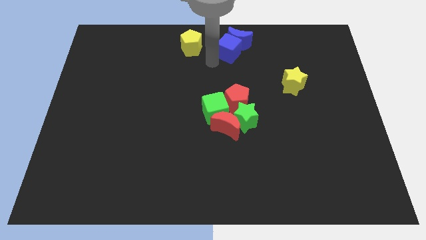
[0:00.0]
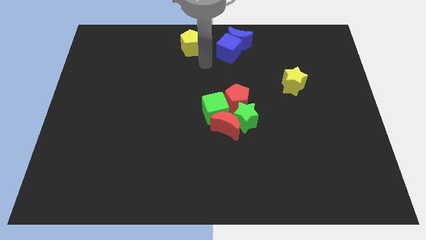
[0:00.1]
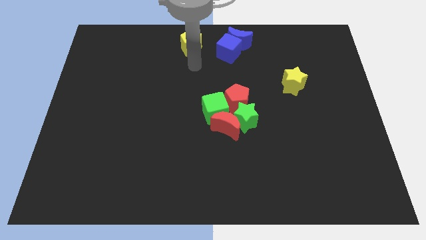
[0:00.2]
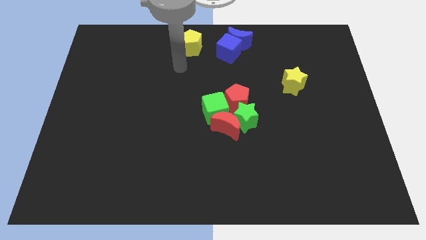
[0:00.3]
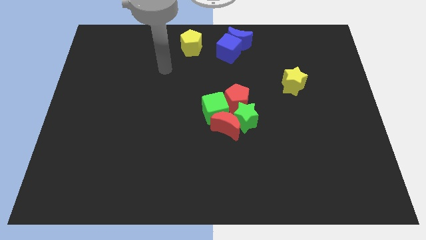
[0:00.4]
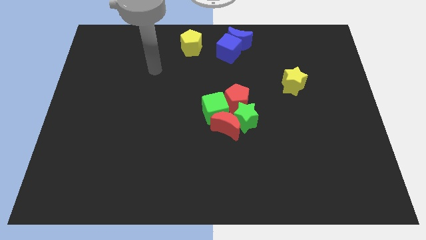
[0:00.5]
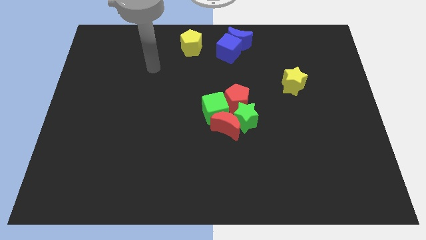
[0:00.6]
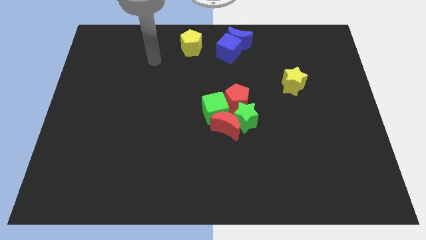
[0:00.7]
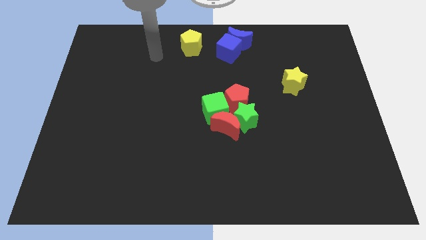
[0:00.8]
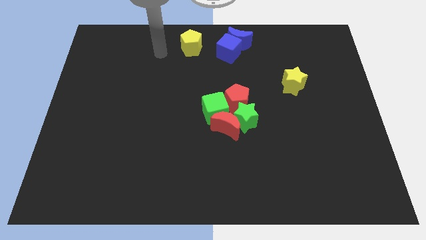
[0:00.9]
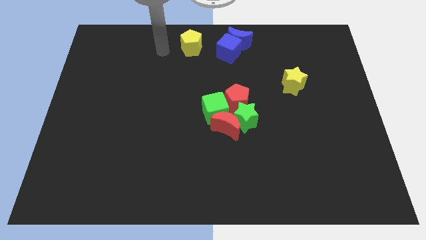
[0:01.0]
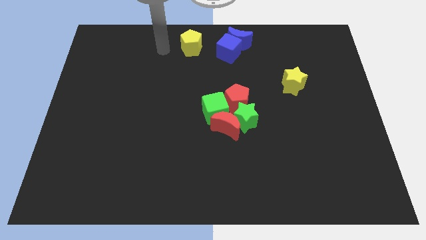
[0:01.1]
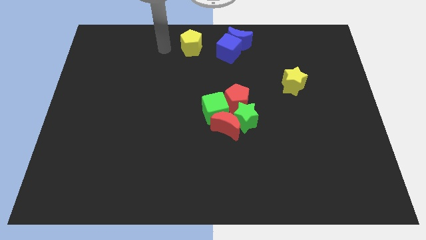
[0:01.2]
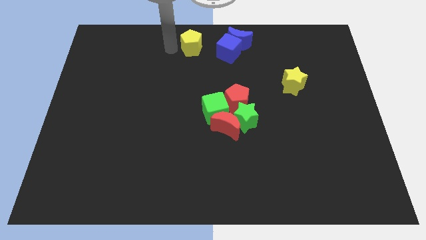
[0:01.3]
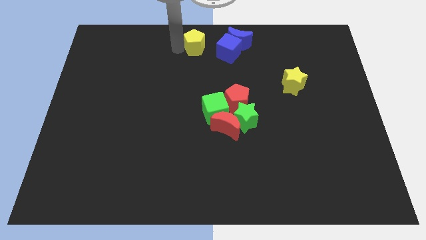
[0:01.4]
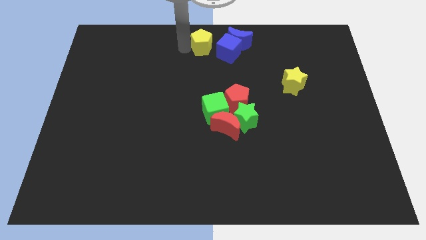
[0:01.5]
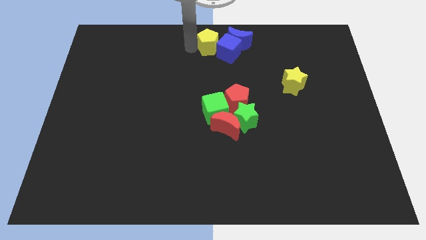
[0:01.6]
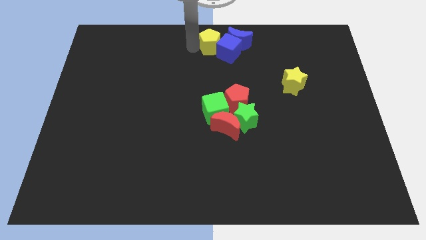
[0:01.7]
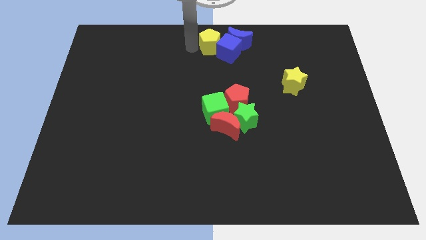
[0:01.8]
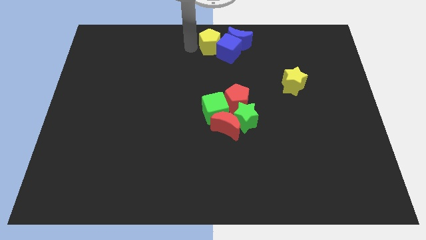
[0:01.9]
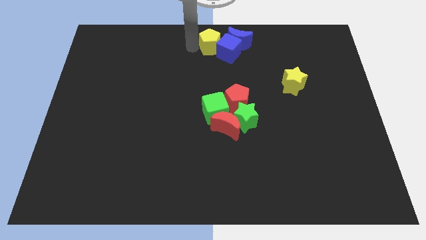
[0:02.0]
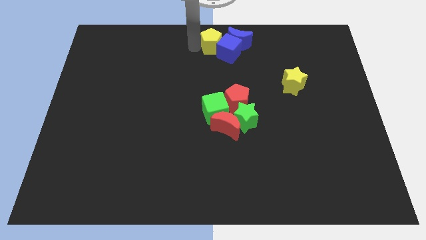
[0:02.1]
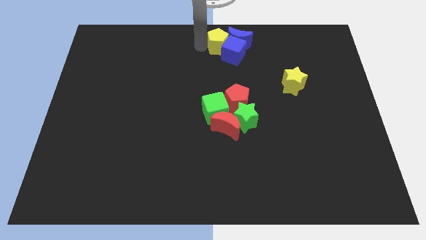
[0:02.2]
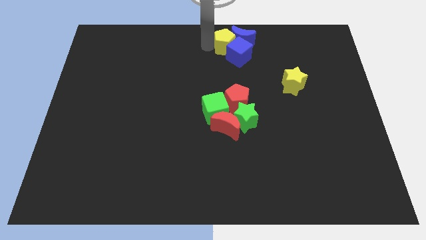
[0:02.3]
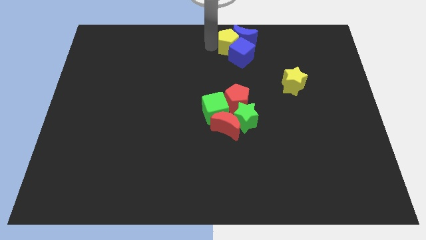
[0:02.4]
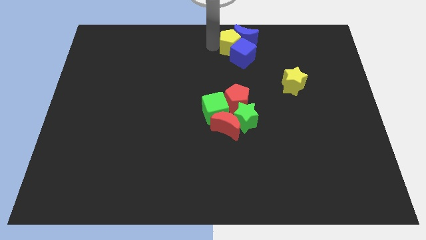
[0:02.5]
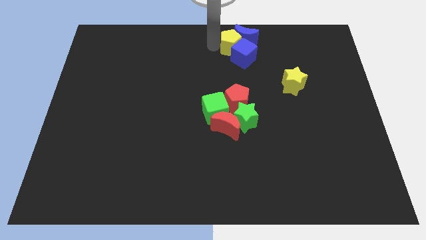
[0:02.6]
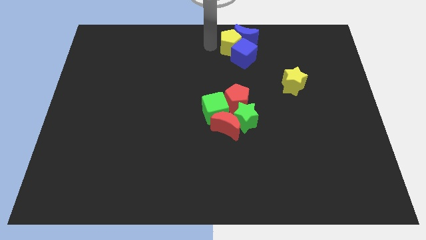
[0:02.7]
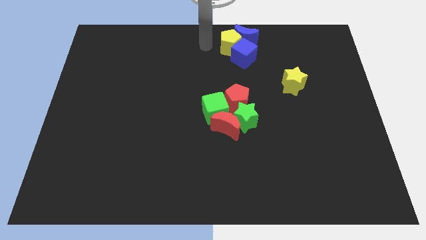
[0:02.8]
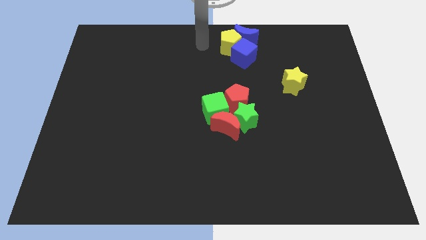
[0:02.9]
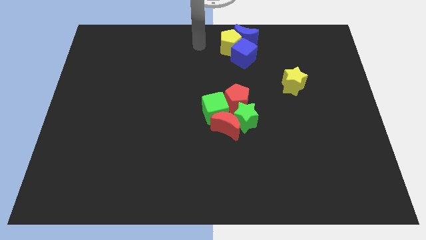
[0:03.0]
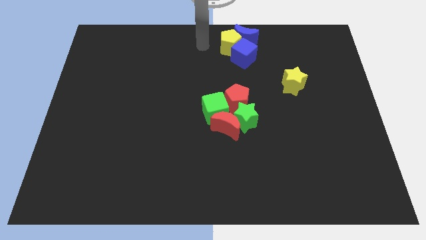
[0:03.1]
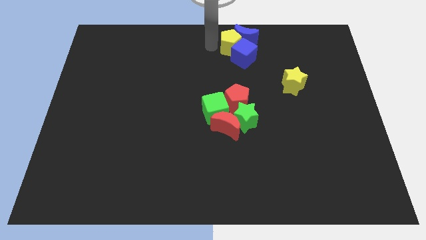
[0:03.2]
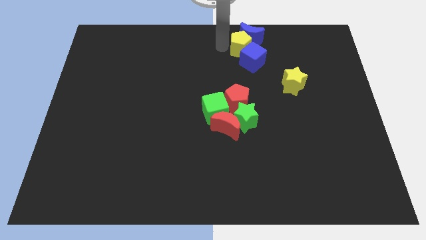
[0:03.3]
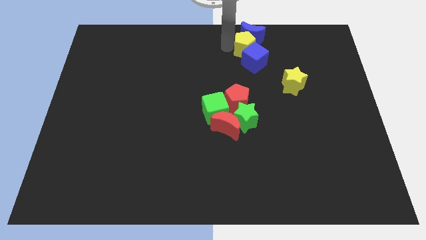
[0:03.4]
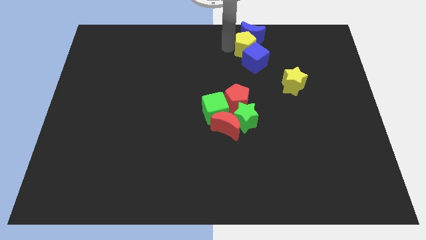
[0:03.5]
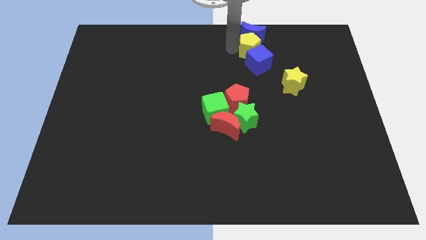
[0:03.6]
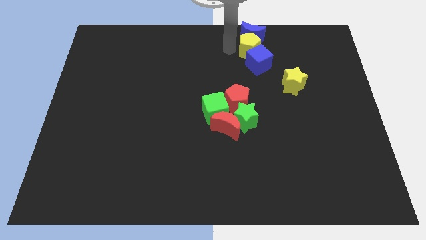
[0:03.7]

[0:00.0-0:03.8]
push yellow pentagon into blue blocks

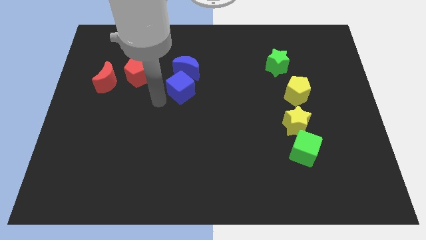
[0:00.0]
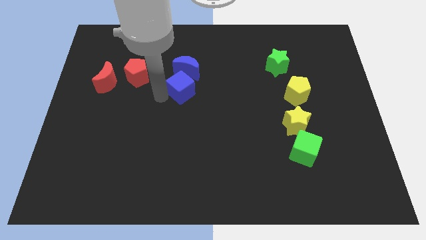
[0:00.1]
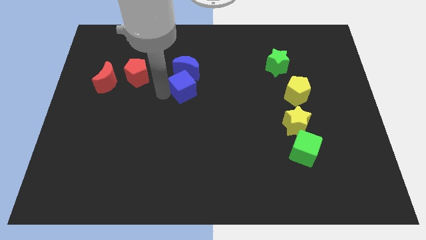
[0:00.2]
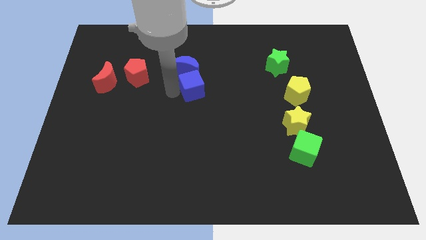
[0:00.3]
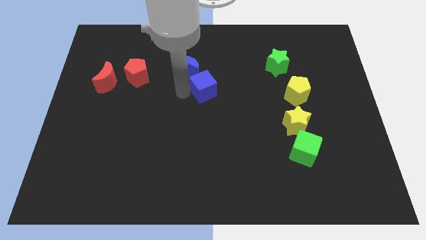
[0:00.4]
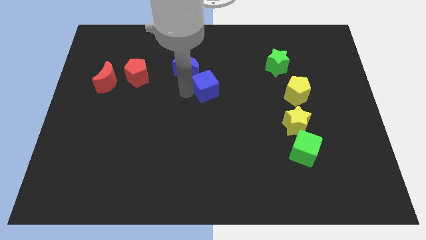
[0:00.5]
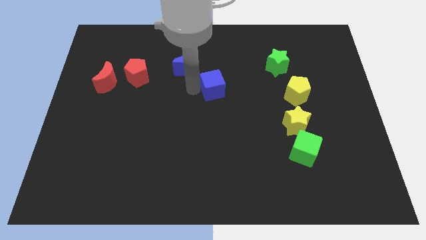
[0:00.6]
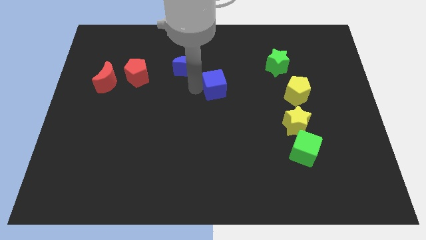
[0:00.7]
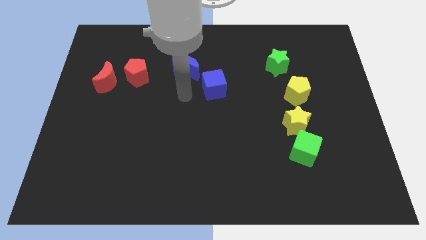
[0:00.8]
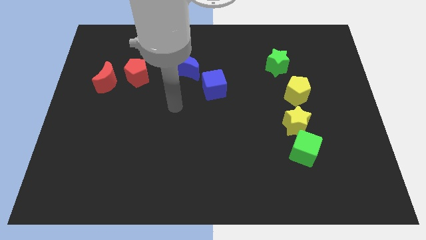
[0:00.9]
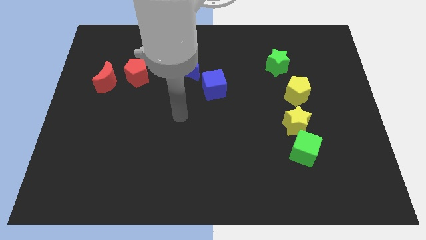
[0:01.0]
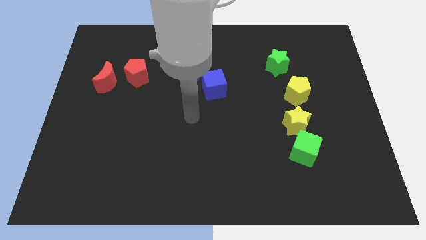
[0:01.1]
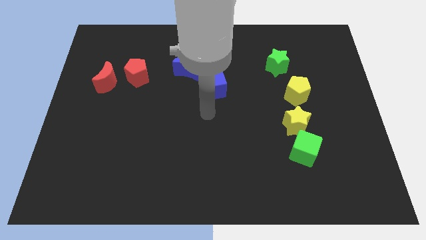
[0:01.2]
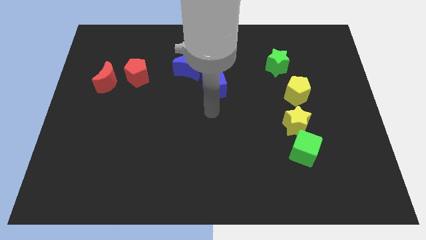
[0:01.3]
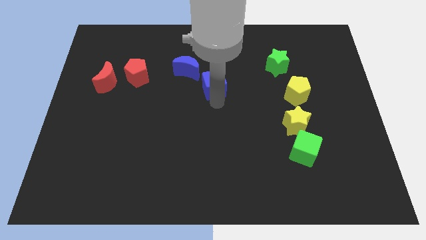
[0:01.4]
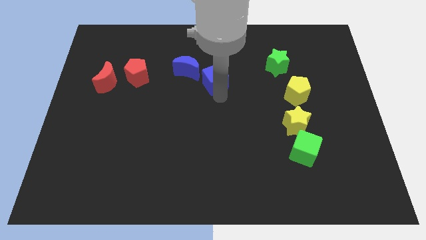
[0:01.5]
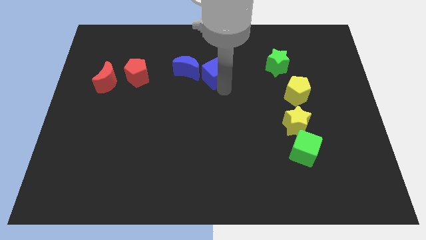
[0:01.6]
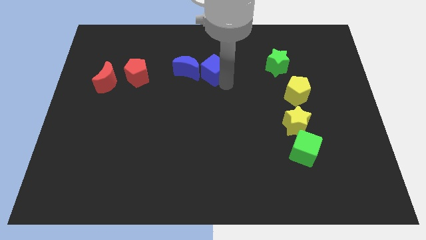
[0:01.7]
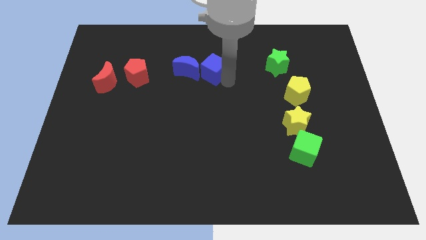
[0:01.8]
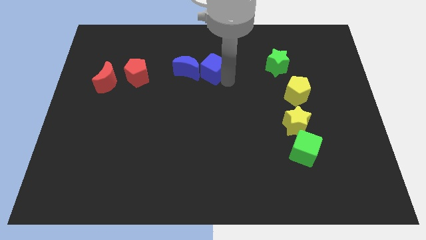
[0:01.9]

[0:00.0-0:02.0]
move the blue cube to the right side of the blue crescent

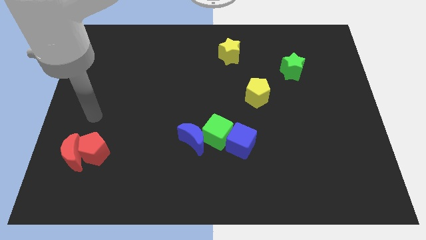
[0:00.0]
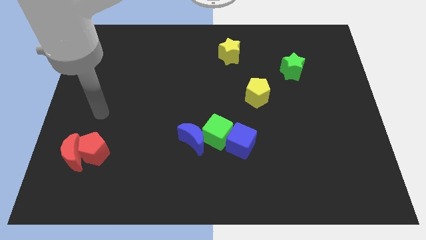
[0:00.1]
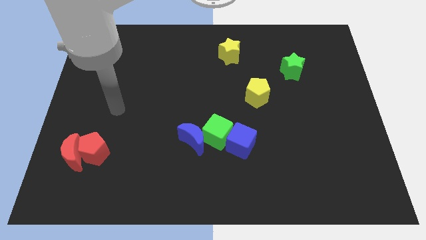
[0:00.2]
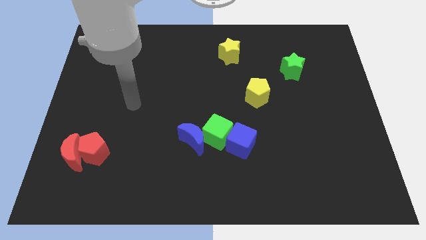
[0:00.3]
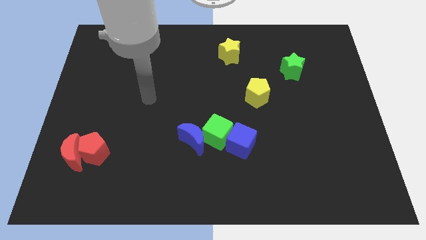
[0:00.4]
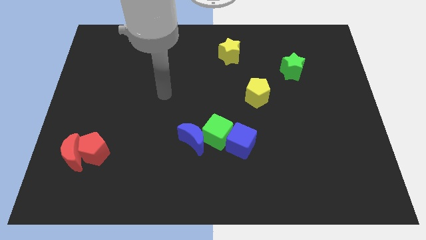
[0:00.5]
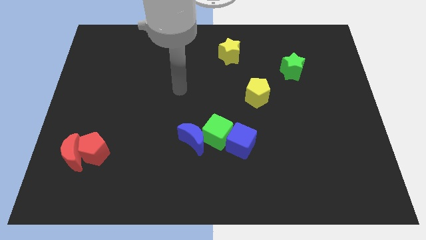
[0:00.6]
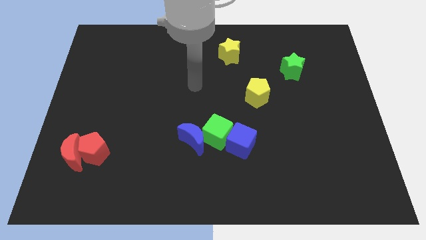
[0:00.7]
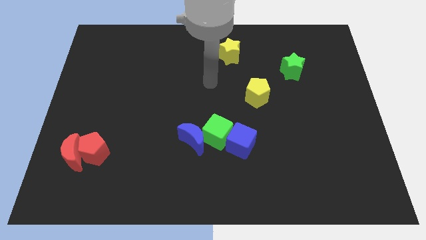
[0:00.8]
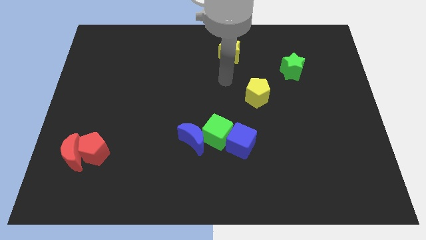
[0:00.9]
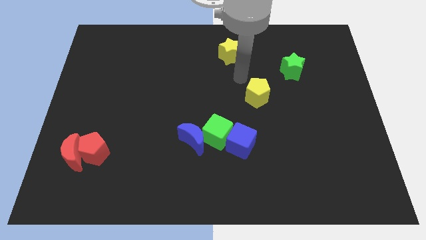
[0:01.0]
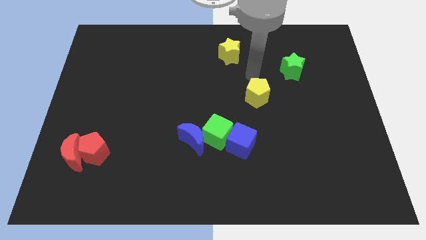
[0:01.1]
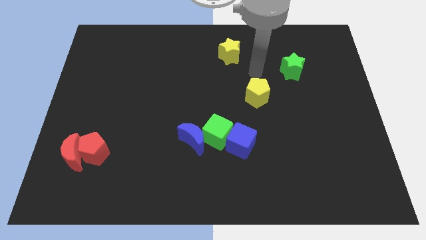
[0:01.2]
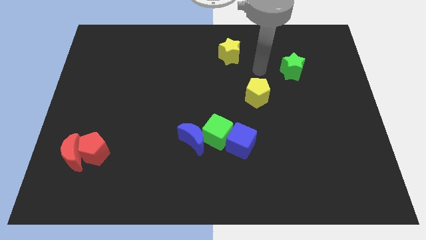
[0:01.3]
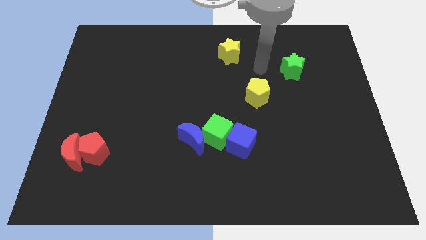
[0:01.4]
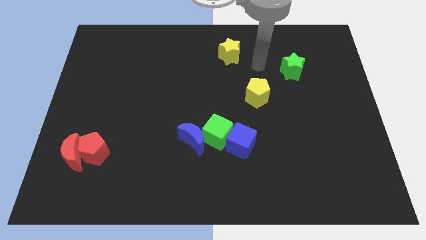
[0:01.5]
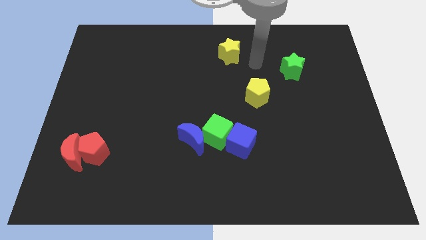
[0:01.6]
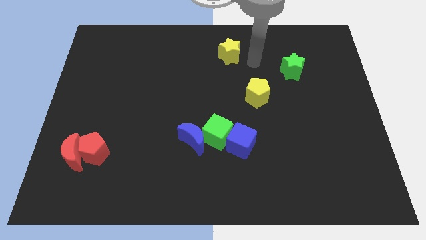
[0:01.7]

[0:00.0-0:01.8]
move your arm to the right of the yellow star

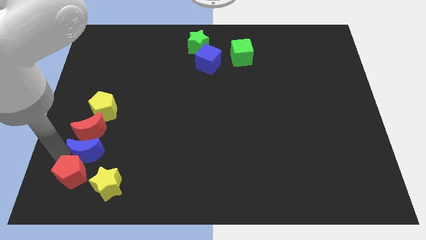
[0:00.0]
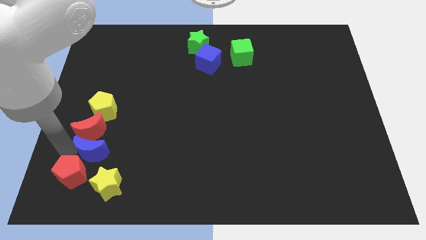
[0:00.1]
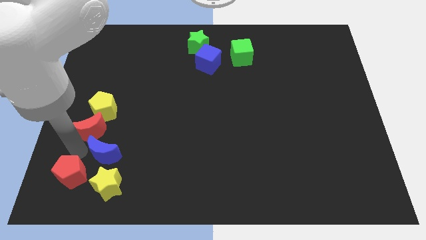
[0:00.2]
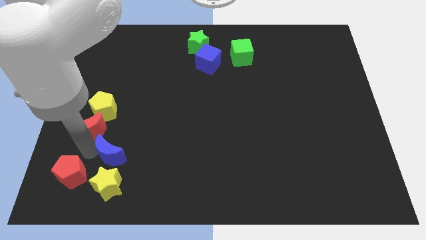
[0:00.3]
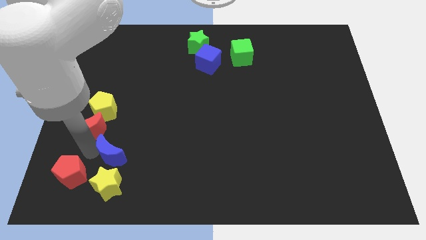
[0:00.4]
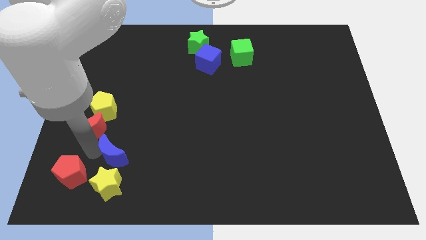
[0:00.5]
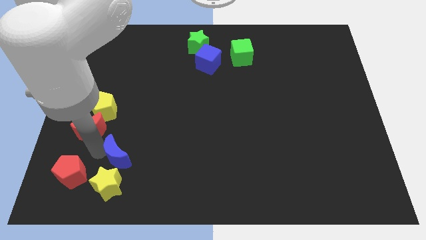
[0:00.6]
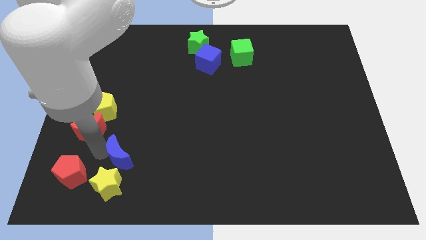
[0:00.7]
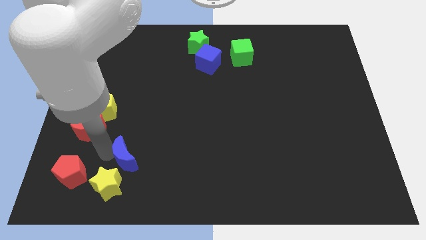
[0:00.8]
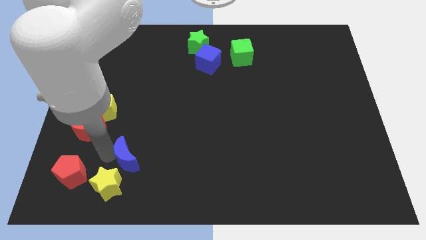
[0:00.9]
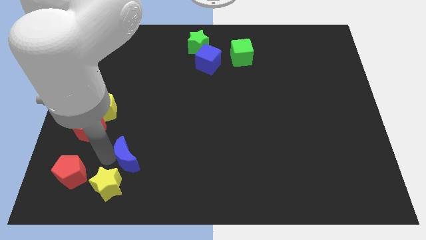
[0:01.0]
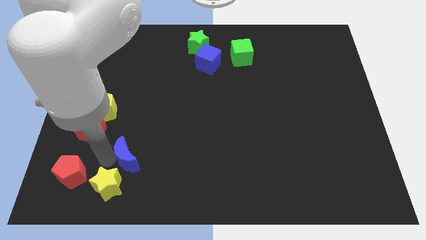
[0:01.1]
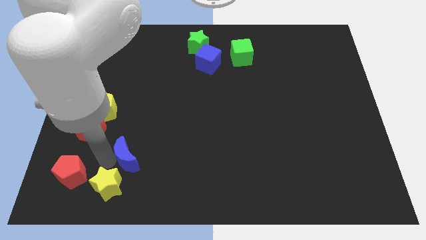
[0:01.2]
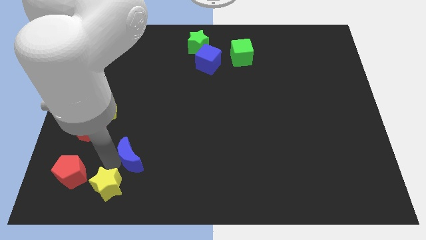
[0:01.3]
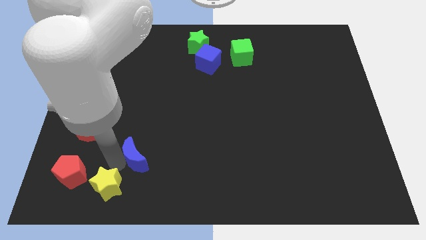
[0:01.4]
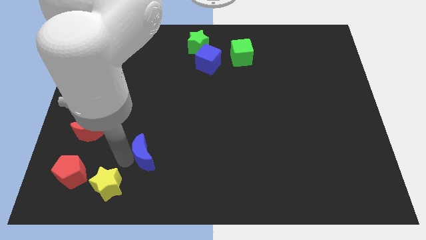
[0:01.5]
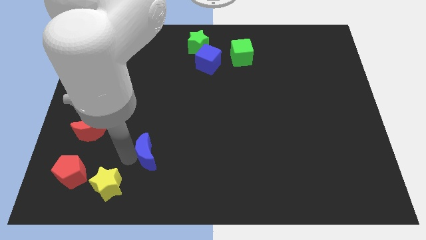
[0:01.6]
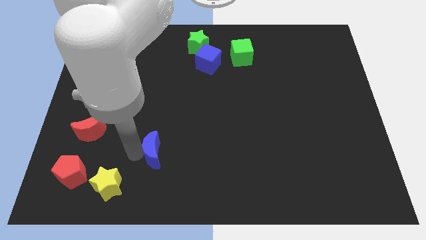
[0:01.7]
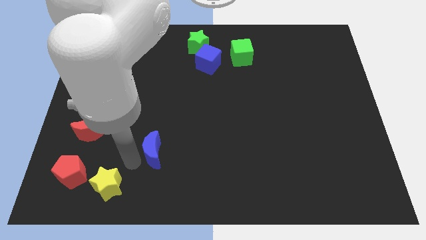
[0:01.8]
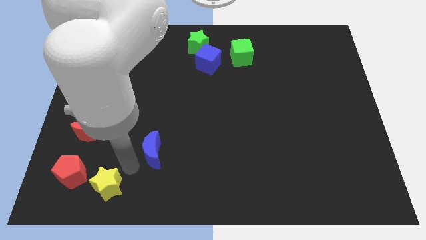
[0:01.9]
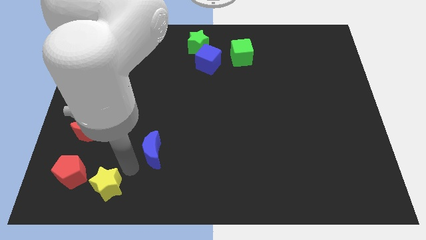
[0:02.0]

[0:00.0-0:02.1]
separate the blue moon and the red pentagon
